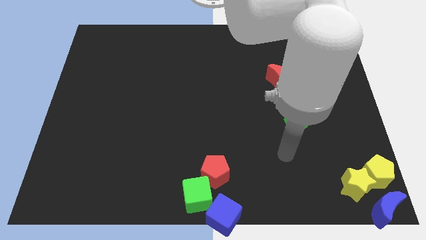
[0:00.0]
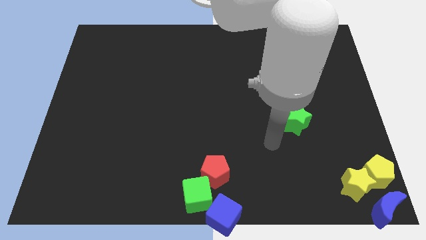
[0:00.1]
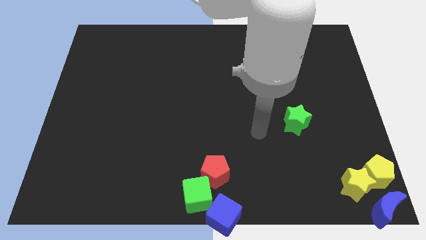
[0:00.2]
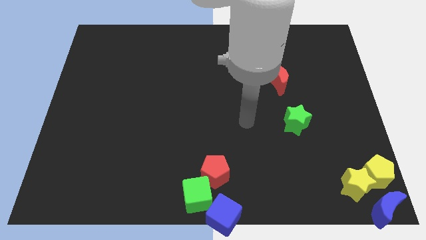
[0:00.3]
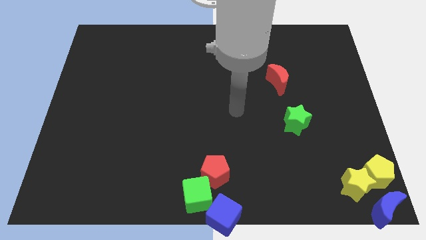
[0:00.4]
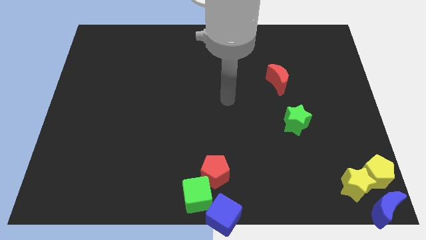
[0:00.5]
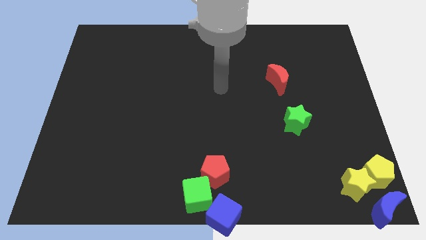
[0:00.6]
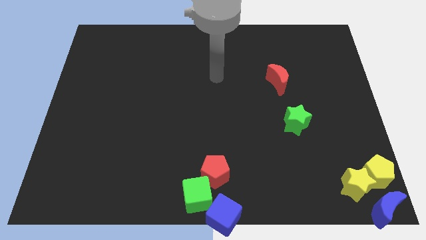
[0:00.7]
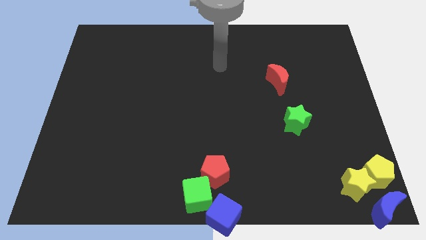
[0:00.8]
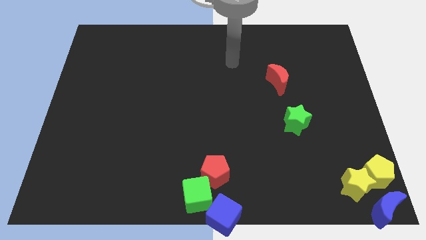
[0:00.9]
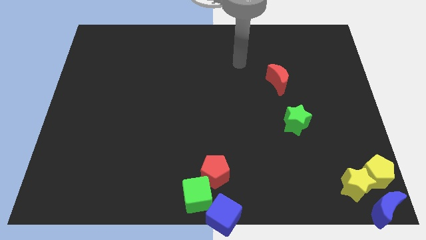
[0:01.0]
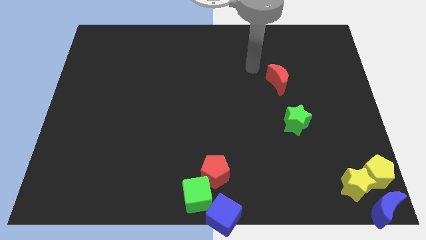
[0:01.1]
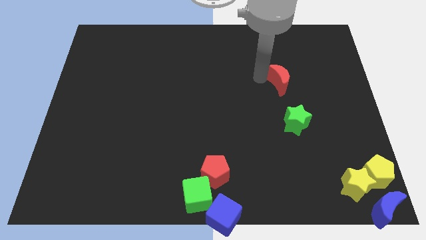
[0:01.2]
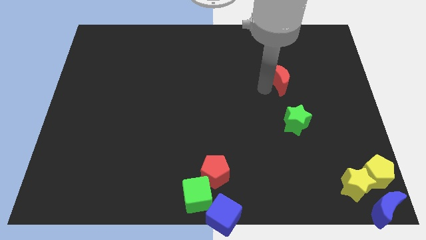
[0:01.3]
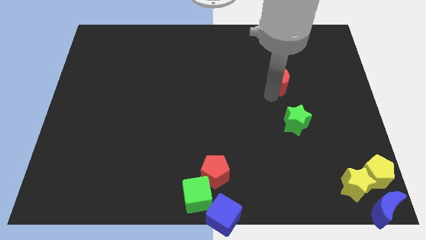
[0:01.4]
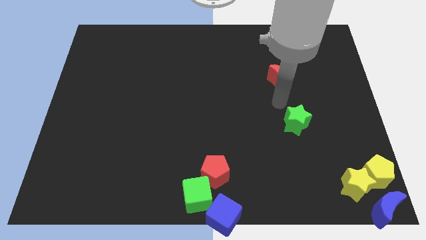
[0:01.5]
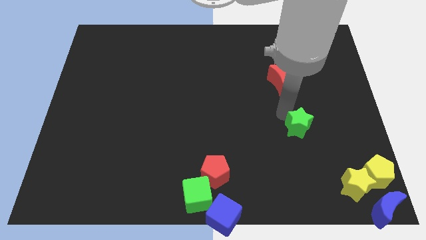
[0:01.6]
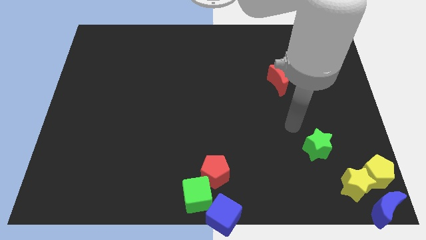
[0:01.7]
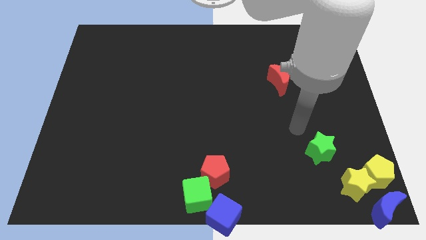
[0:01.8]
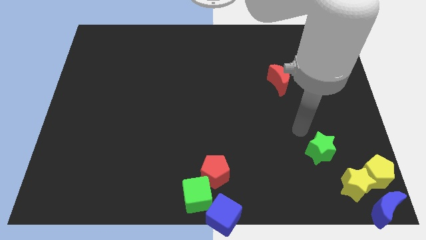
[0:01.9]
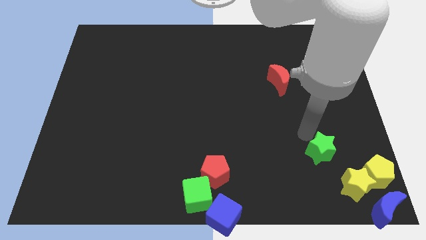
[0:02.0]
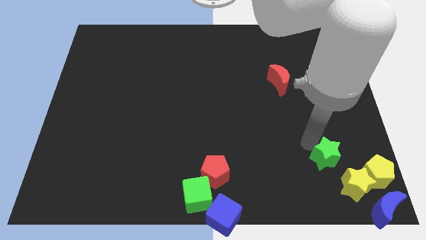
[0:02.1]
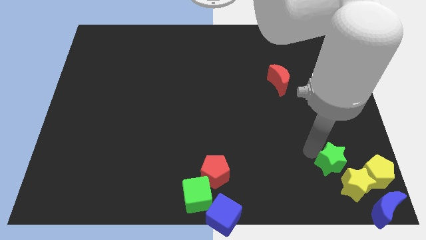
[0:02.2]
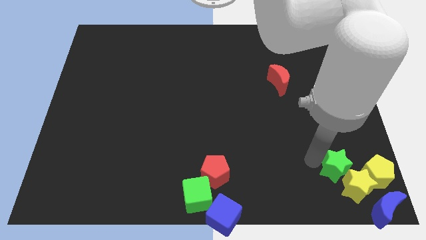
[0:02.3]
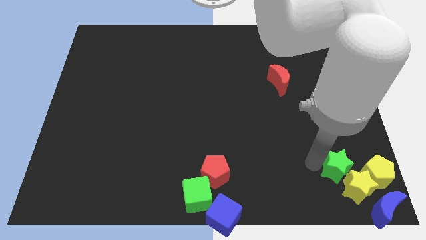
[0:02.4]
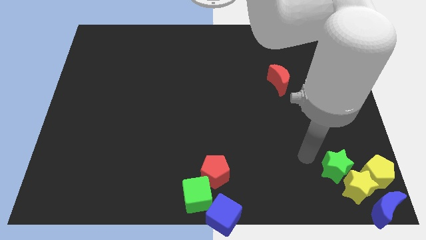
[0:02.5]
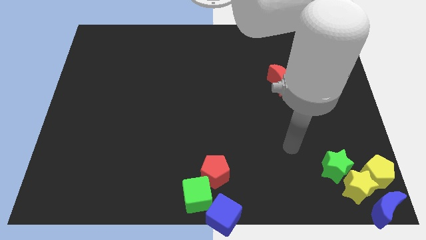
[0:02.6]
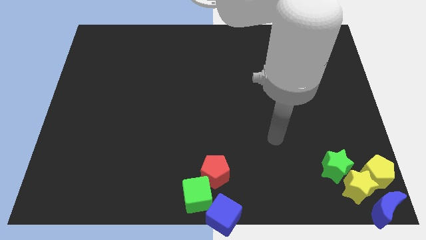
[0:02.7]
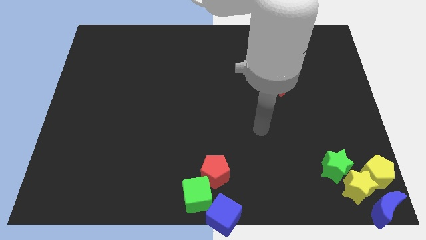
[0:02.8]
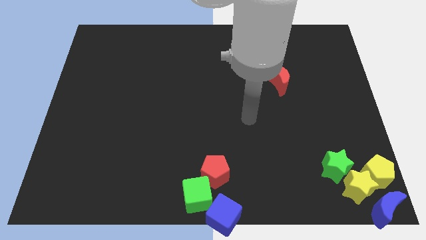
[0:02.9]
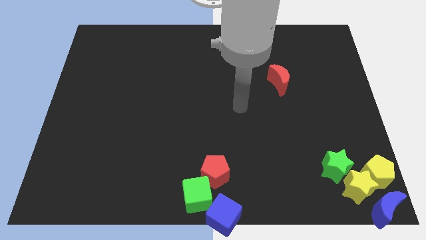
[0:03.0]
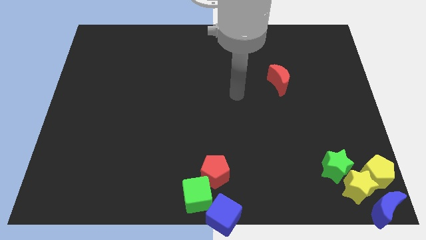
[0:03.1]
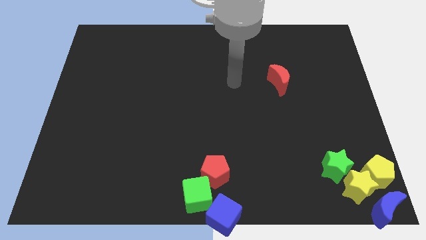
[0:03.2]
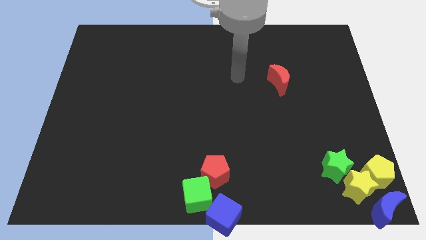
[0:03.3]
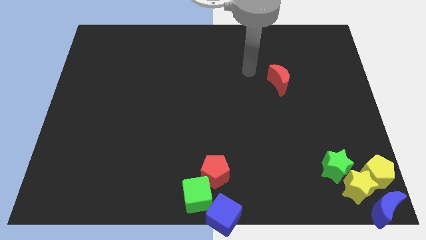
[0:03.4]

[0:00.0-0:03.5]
move the green star into the yellow star

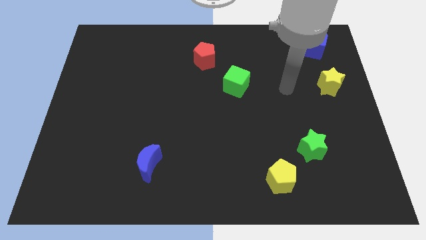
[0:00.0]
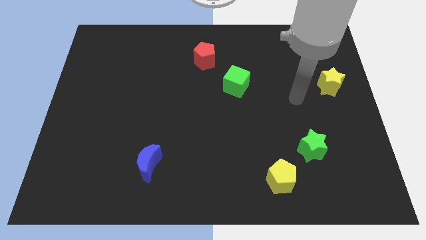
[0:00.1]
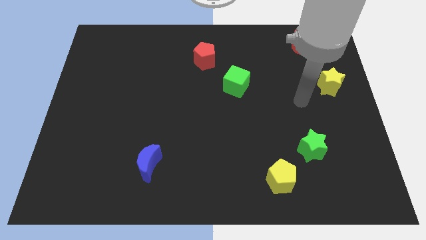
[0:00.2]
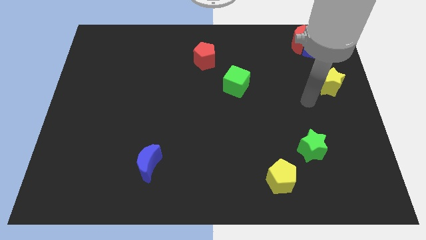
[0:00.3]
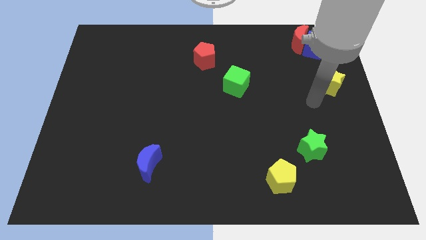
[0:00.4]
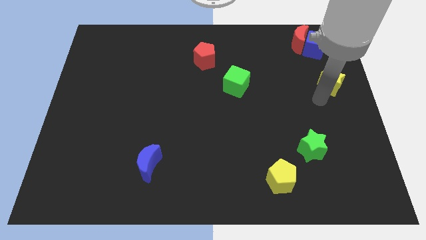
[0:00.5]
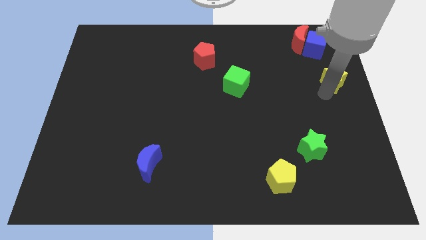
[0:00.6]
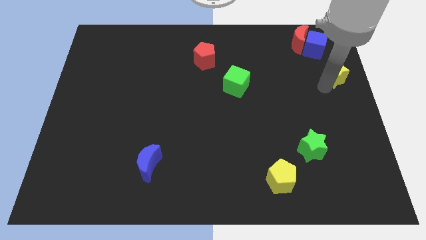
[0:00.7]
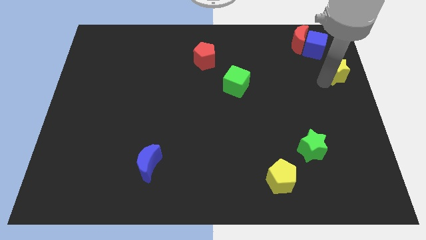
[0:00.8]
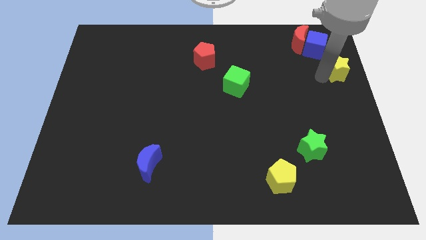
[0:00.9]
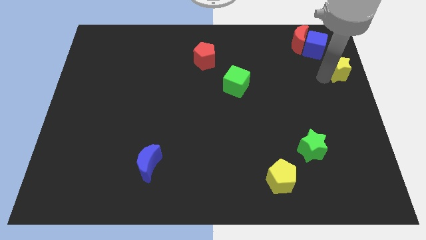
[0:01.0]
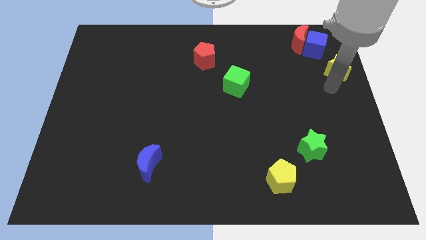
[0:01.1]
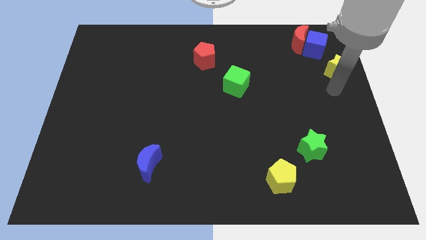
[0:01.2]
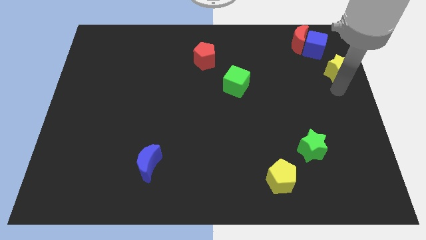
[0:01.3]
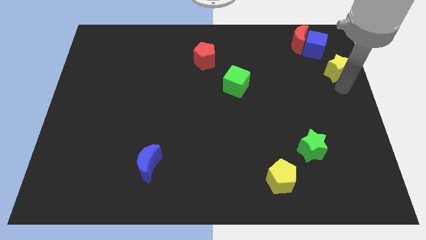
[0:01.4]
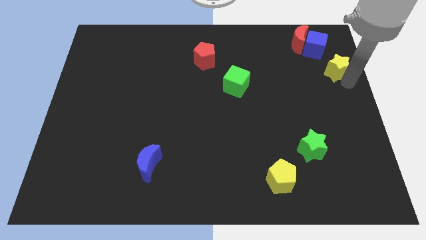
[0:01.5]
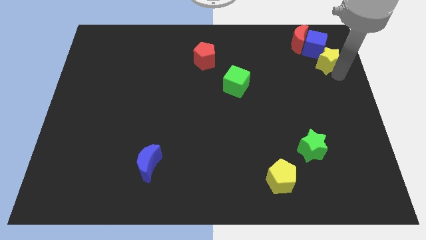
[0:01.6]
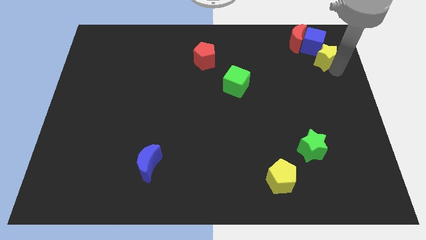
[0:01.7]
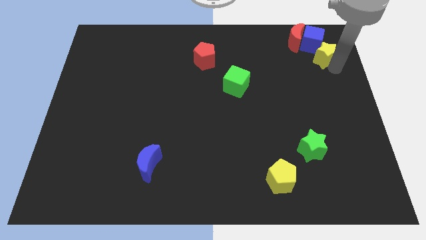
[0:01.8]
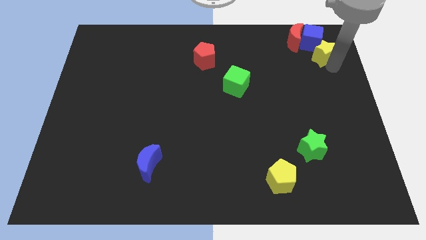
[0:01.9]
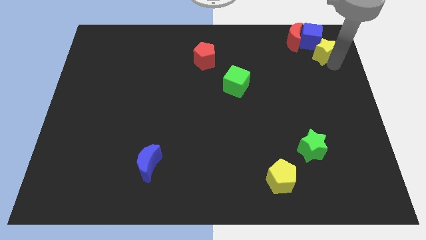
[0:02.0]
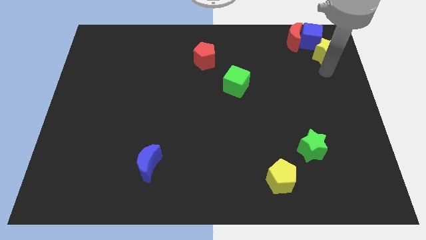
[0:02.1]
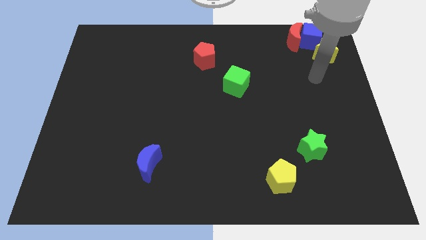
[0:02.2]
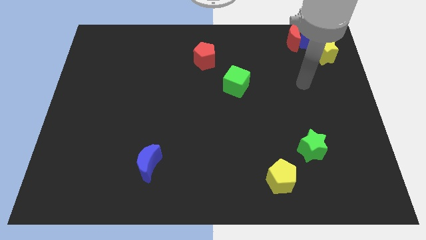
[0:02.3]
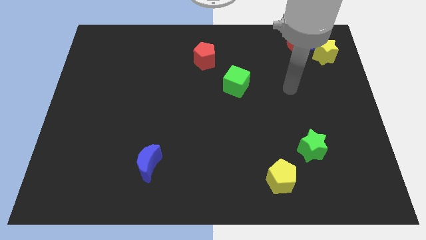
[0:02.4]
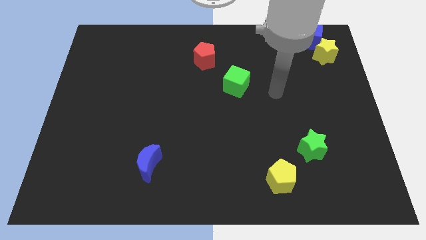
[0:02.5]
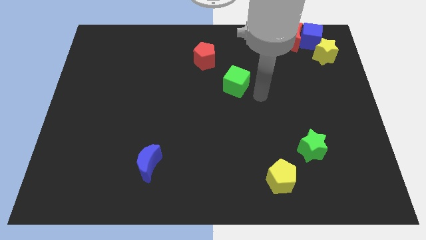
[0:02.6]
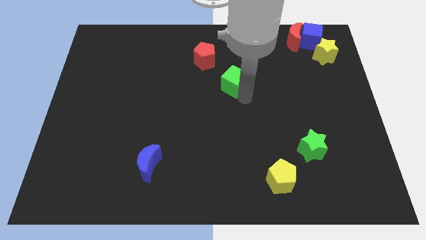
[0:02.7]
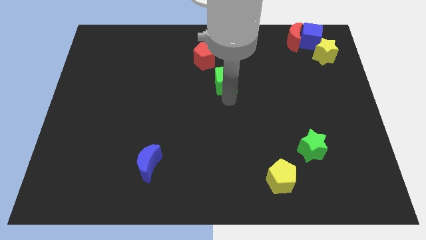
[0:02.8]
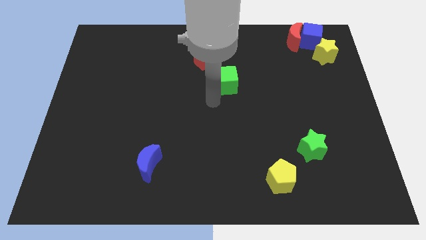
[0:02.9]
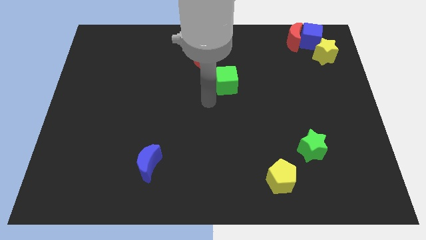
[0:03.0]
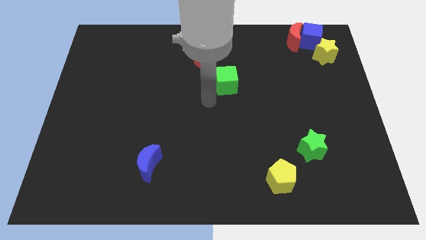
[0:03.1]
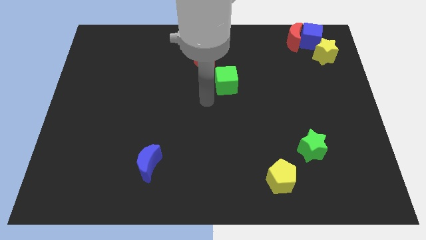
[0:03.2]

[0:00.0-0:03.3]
move yellow star right below the blue cube

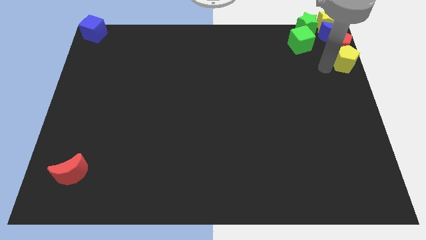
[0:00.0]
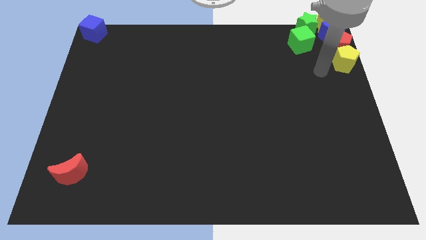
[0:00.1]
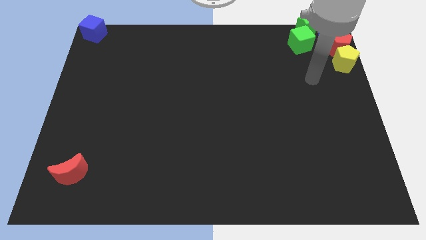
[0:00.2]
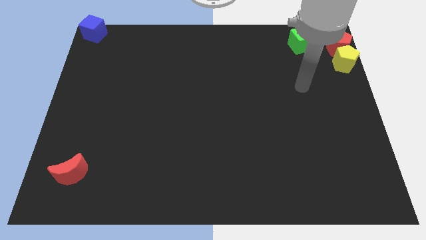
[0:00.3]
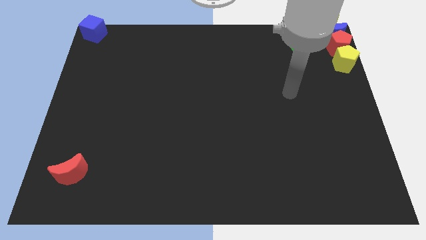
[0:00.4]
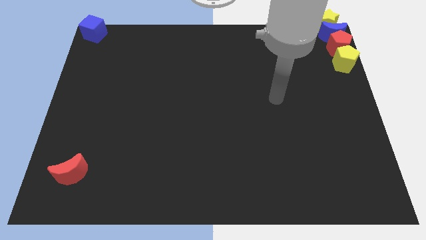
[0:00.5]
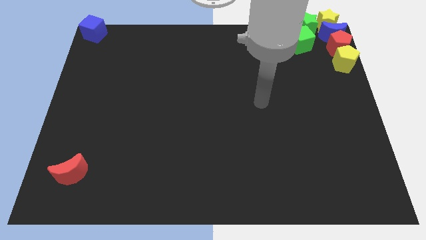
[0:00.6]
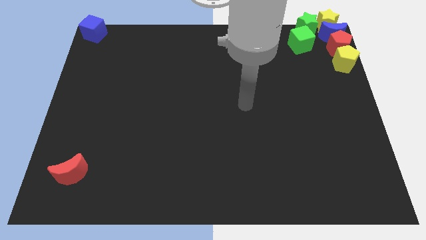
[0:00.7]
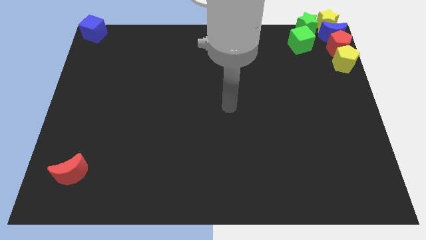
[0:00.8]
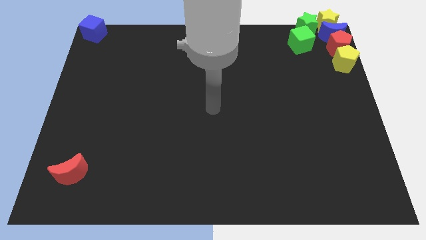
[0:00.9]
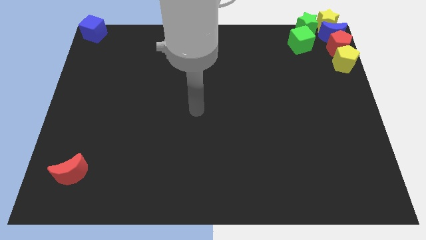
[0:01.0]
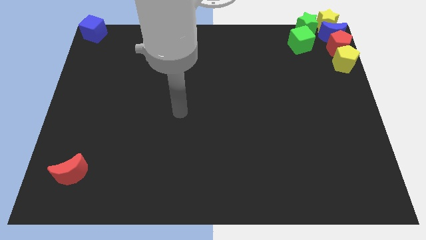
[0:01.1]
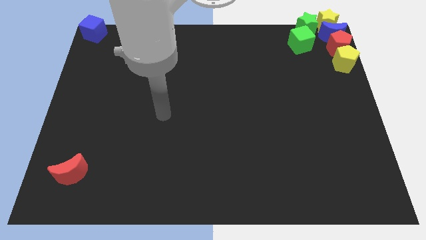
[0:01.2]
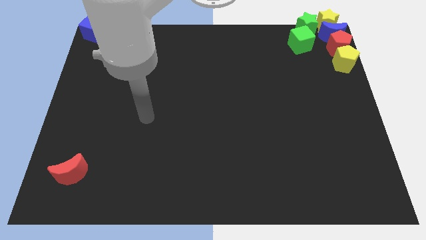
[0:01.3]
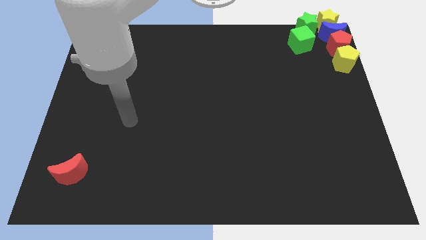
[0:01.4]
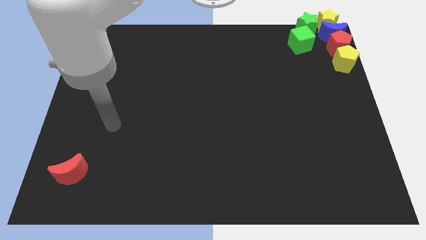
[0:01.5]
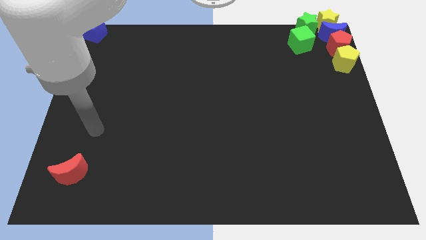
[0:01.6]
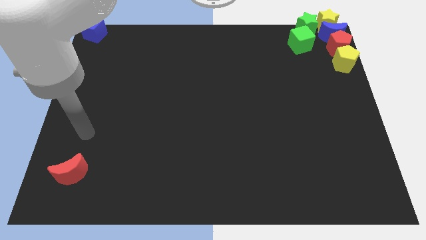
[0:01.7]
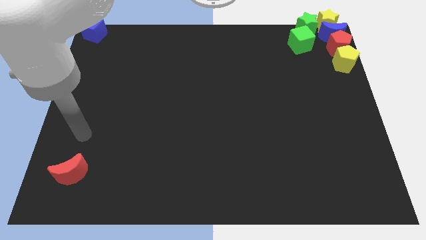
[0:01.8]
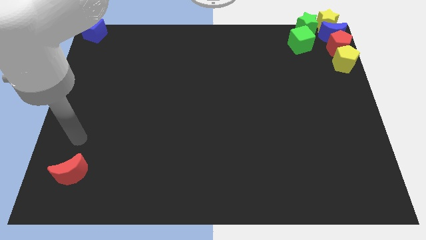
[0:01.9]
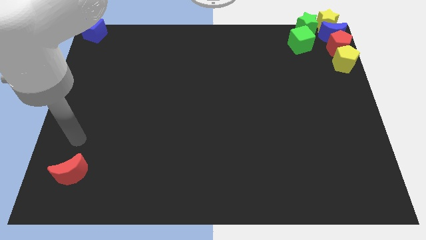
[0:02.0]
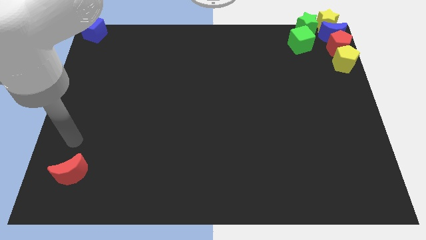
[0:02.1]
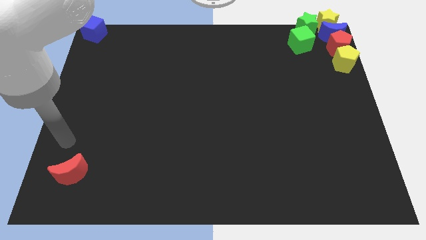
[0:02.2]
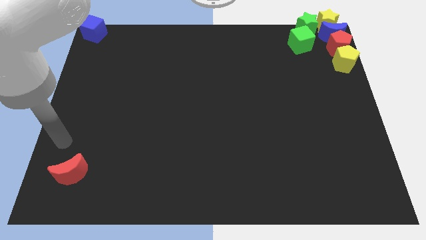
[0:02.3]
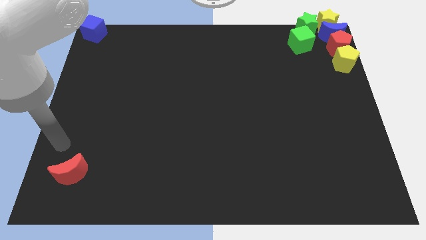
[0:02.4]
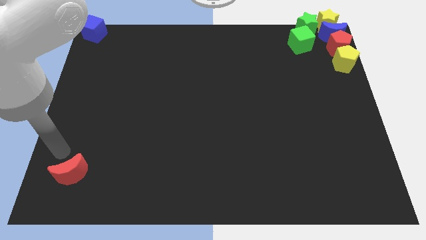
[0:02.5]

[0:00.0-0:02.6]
move your arm to the red crescent
